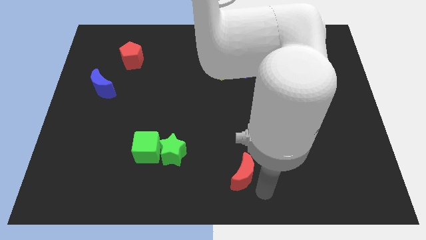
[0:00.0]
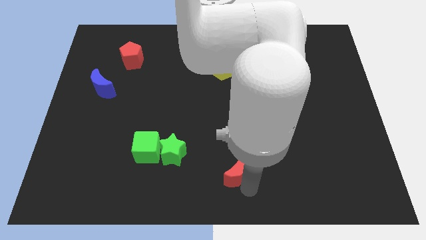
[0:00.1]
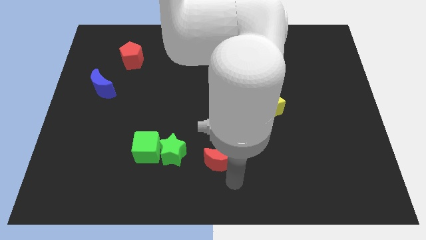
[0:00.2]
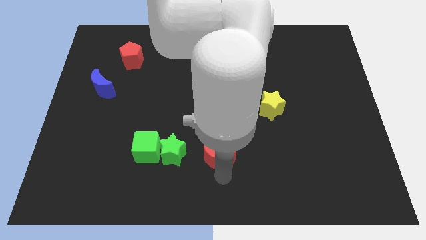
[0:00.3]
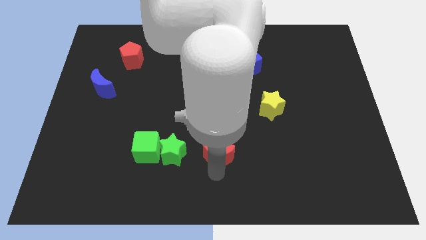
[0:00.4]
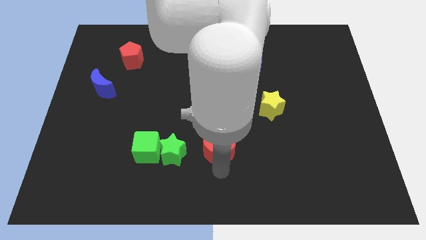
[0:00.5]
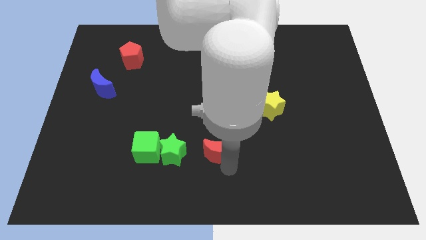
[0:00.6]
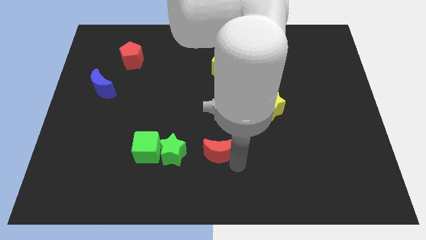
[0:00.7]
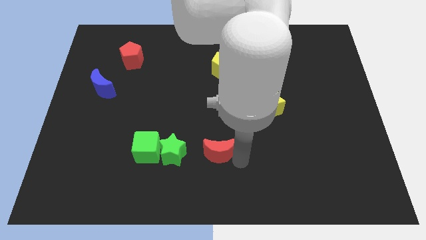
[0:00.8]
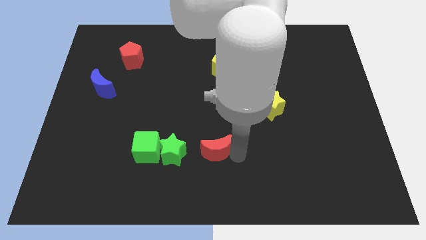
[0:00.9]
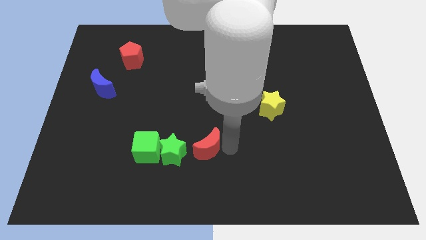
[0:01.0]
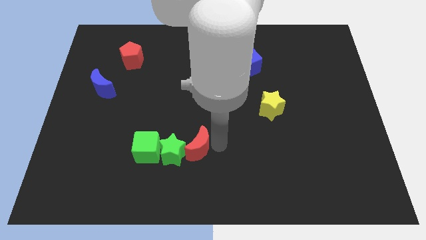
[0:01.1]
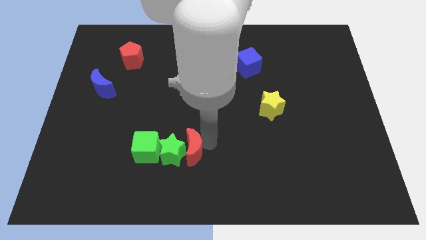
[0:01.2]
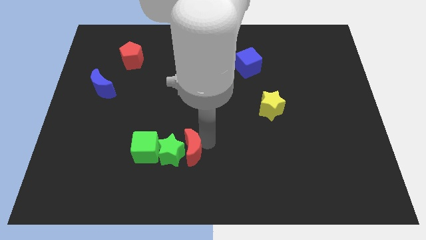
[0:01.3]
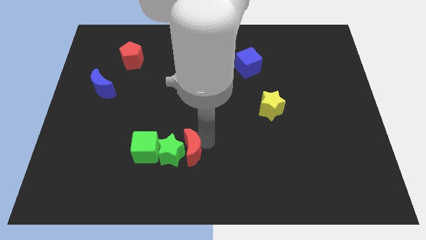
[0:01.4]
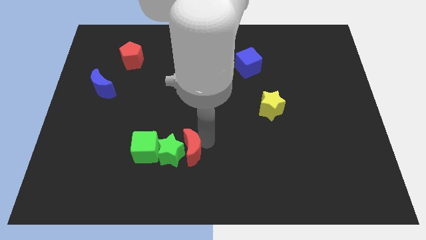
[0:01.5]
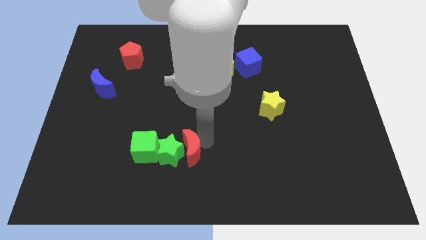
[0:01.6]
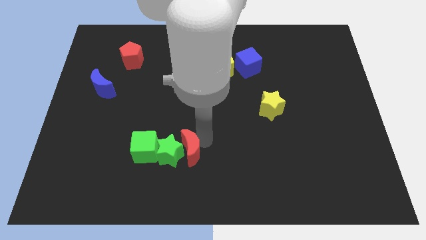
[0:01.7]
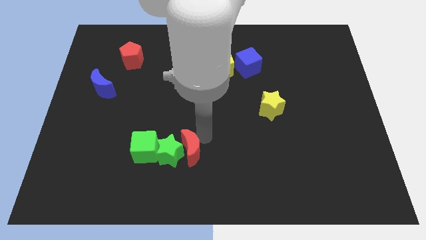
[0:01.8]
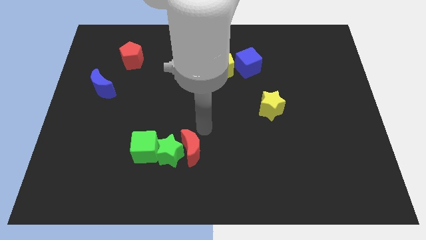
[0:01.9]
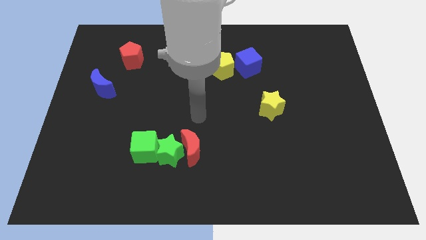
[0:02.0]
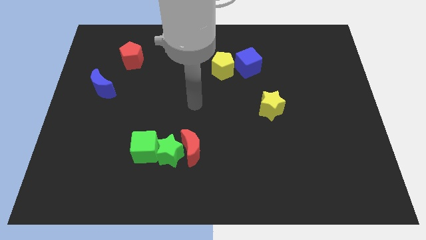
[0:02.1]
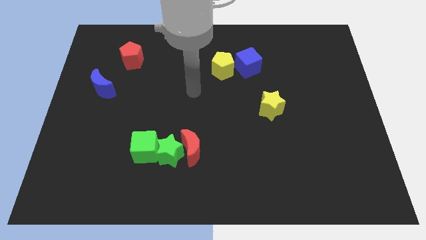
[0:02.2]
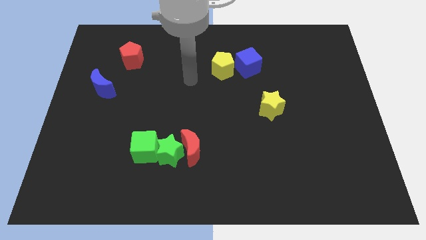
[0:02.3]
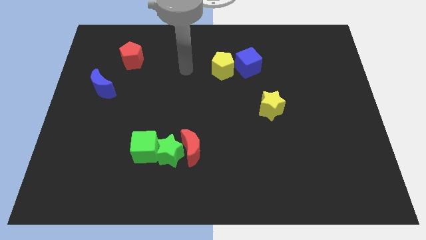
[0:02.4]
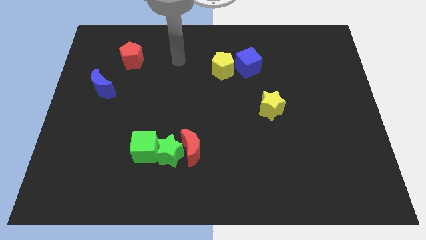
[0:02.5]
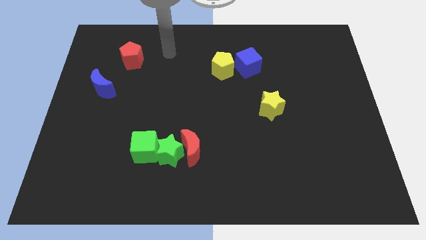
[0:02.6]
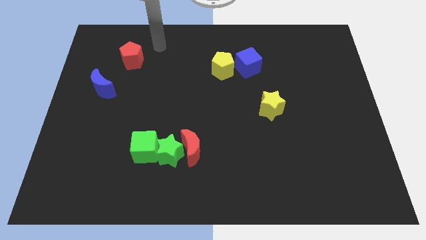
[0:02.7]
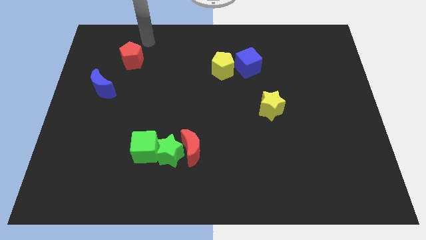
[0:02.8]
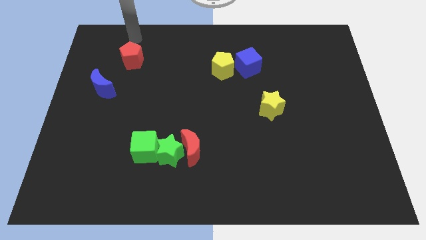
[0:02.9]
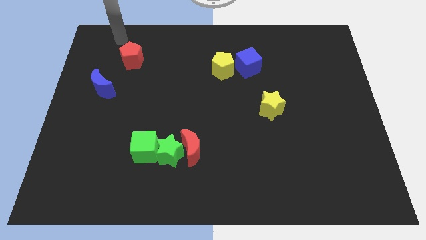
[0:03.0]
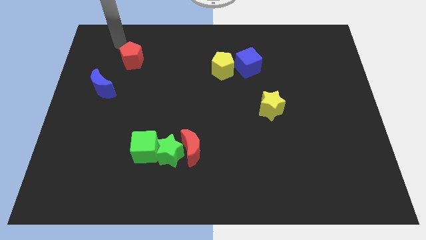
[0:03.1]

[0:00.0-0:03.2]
slide the red crescent into the green star

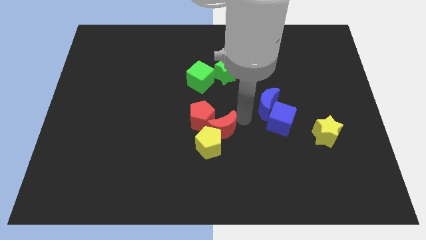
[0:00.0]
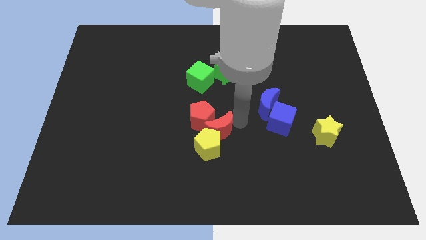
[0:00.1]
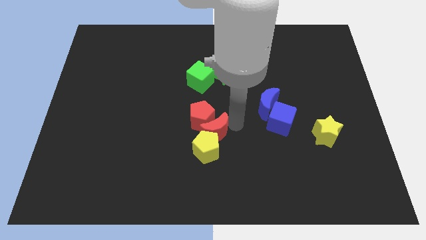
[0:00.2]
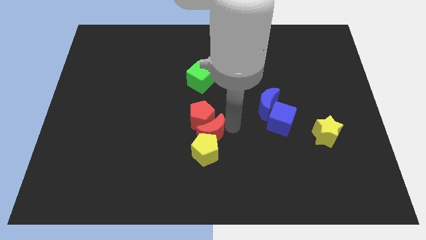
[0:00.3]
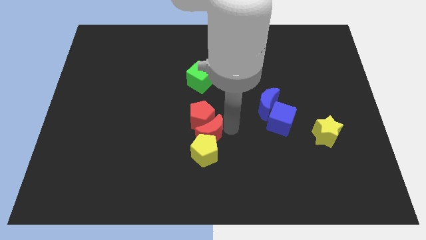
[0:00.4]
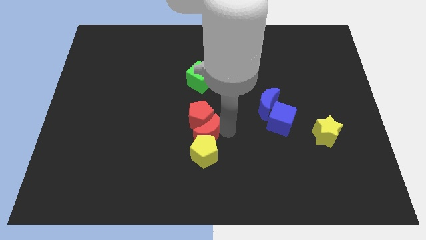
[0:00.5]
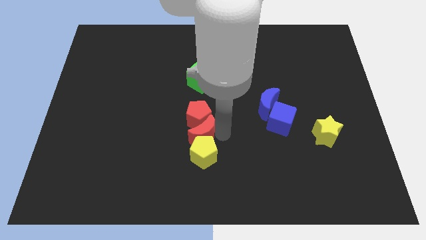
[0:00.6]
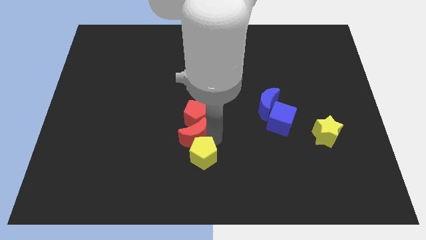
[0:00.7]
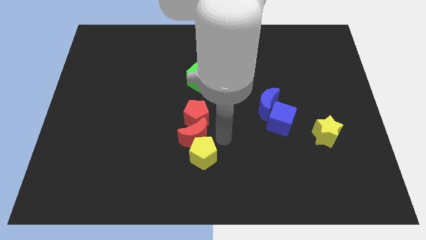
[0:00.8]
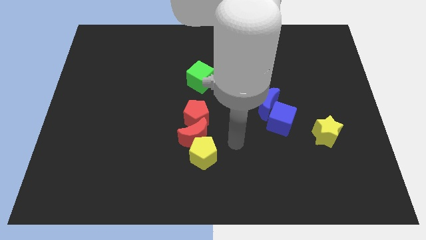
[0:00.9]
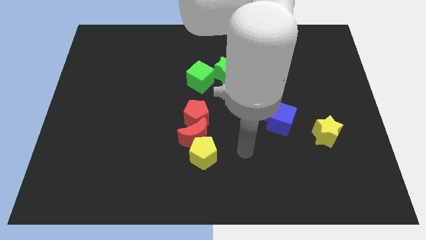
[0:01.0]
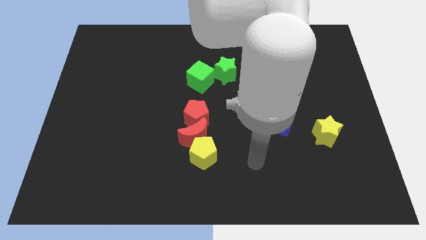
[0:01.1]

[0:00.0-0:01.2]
place the red crescent in between the pentagons

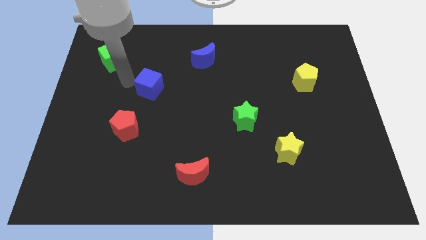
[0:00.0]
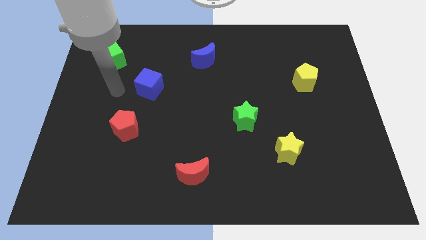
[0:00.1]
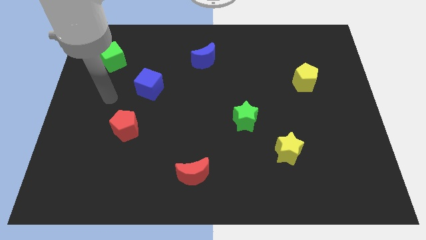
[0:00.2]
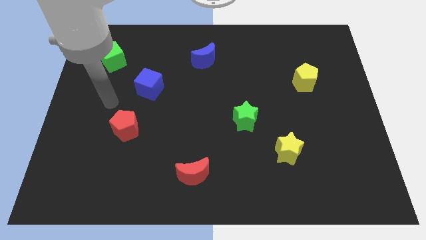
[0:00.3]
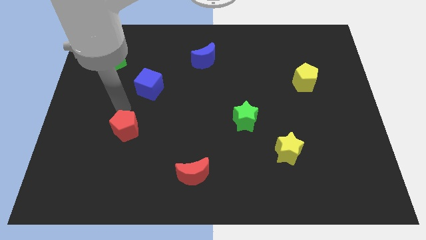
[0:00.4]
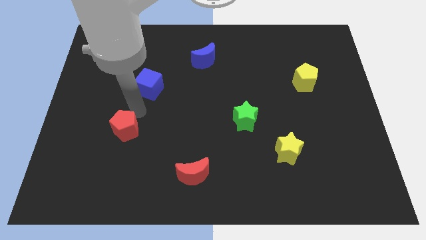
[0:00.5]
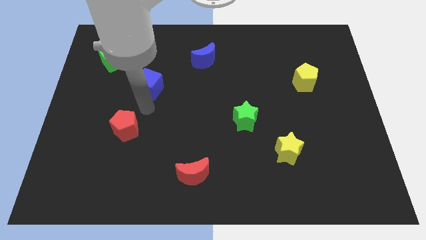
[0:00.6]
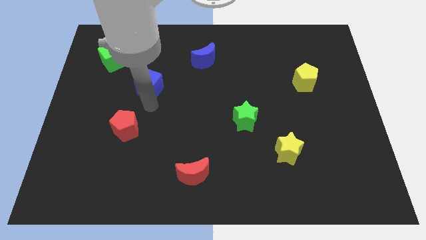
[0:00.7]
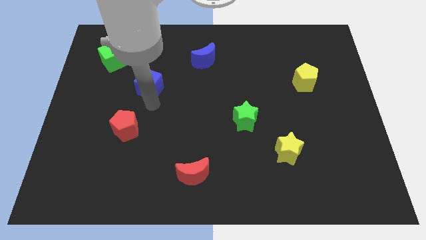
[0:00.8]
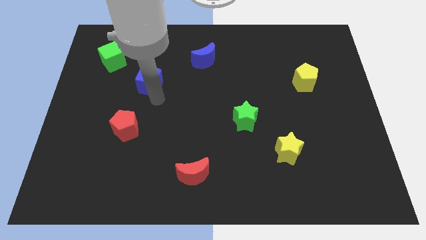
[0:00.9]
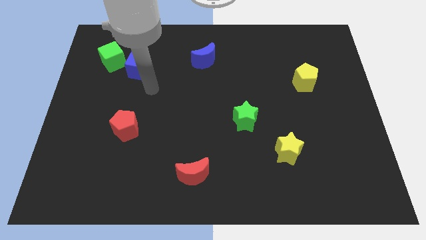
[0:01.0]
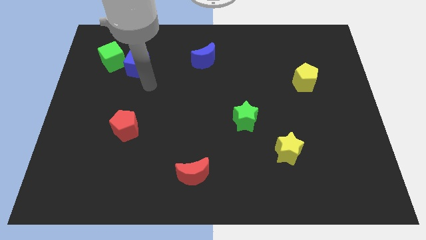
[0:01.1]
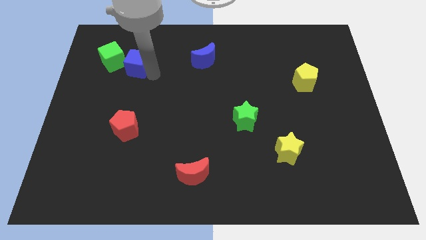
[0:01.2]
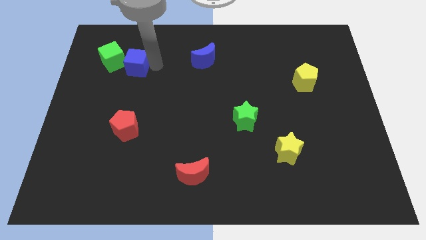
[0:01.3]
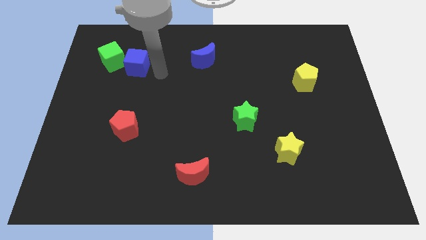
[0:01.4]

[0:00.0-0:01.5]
put the blue cube into the green cube to the right

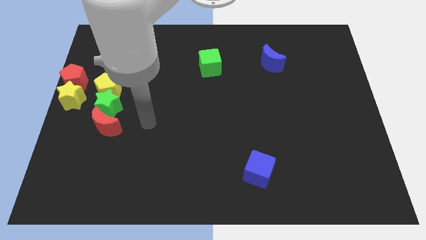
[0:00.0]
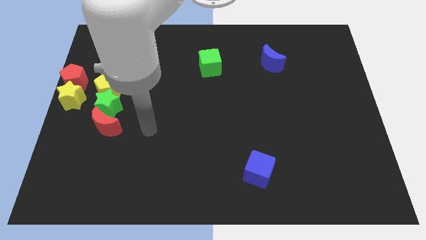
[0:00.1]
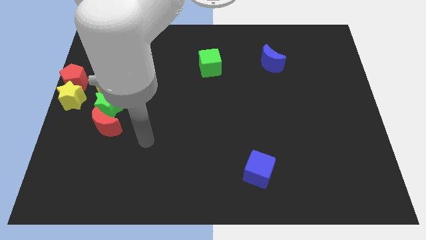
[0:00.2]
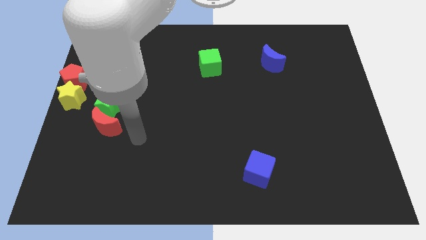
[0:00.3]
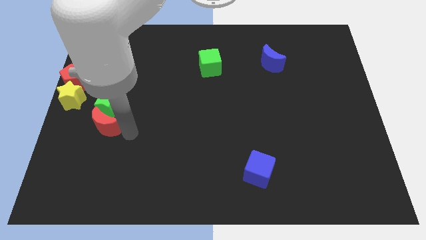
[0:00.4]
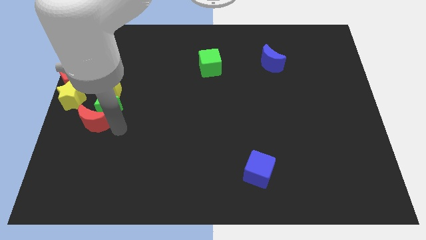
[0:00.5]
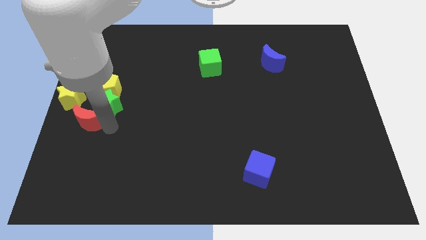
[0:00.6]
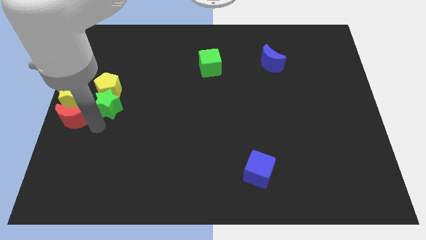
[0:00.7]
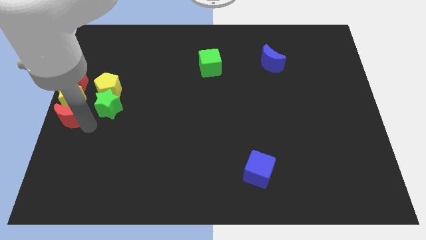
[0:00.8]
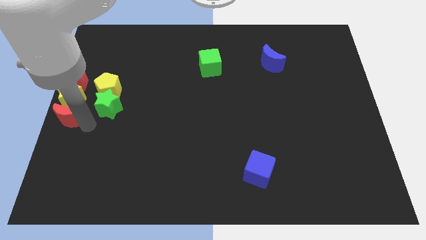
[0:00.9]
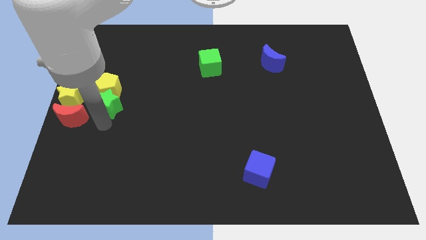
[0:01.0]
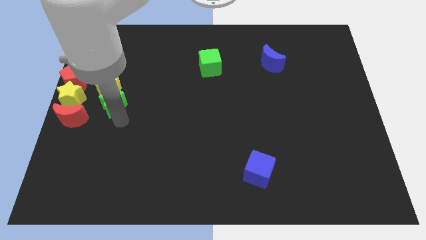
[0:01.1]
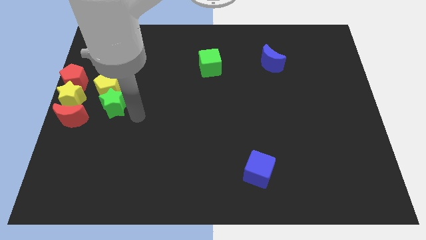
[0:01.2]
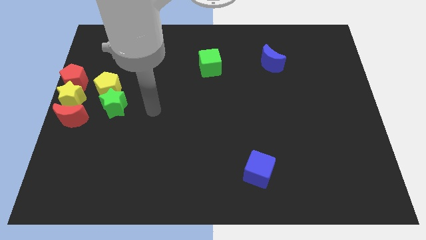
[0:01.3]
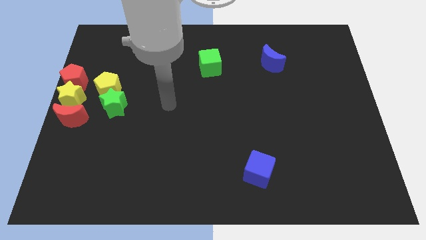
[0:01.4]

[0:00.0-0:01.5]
move the red moon below the yellow star

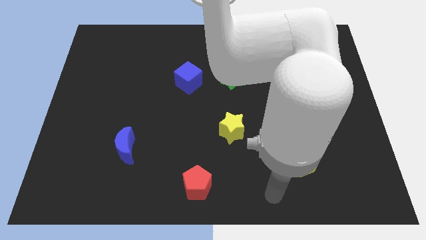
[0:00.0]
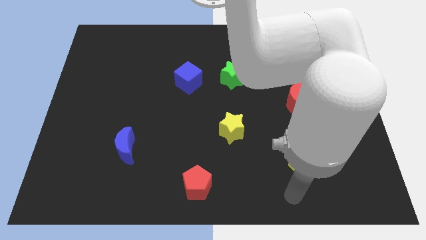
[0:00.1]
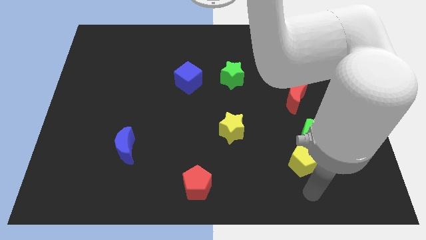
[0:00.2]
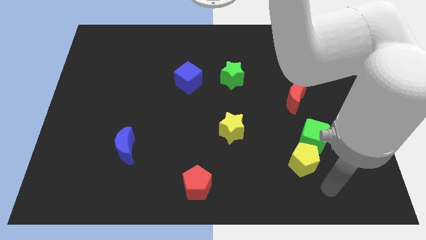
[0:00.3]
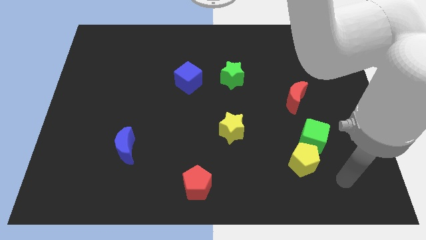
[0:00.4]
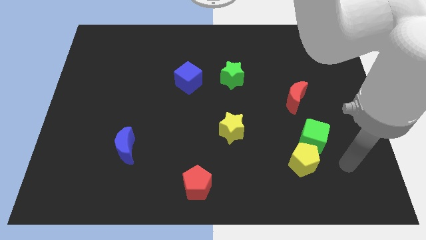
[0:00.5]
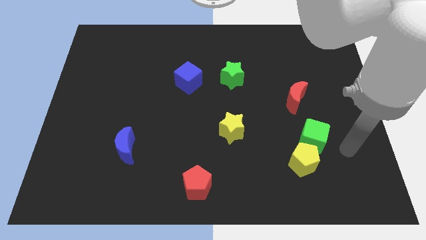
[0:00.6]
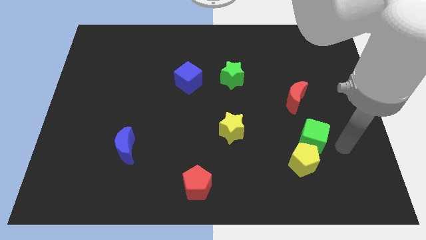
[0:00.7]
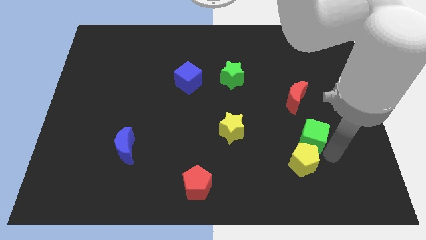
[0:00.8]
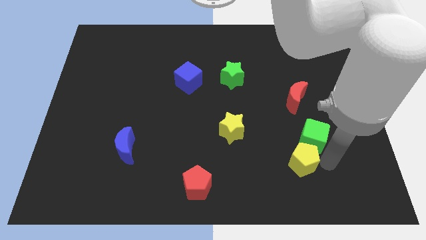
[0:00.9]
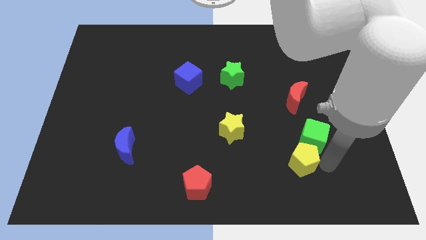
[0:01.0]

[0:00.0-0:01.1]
place the arm right to the yellow pentagon

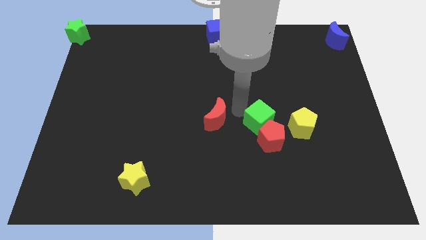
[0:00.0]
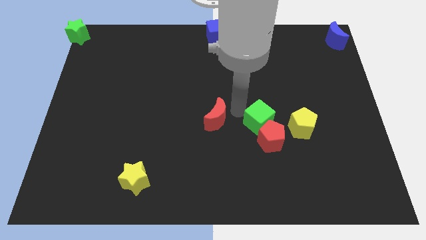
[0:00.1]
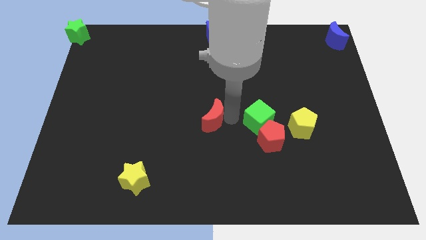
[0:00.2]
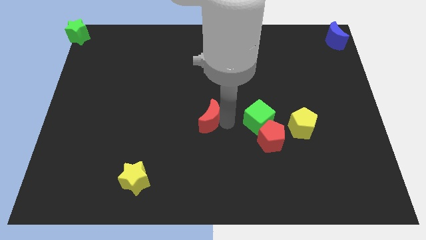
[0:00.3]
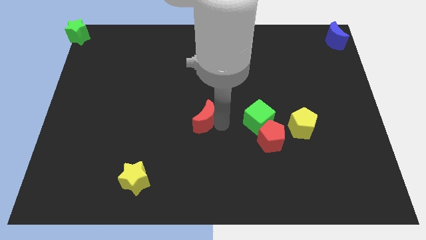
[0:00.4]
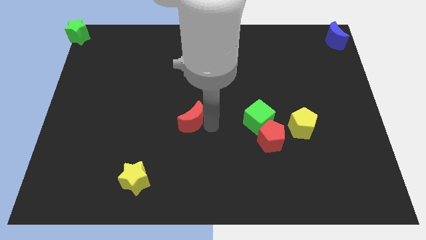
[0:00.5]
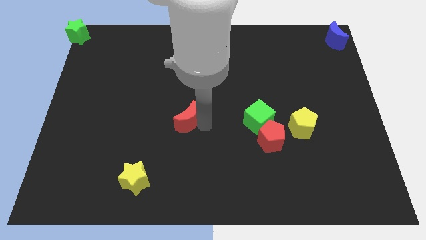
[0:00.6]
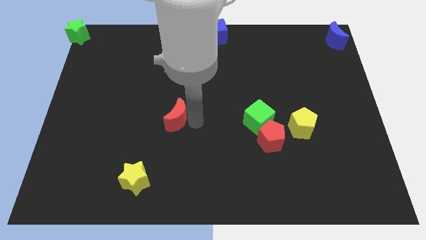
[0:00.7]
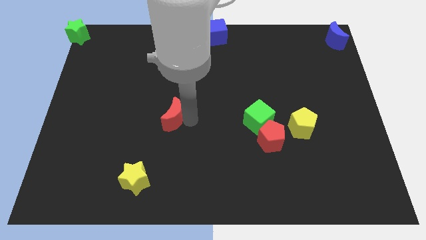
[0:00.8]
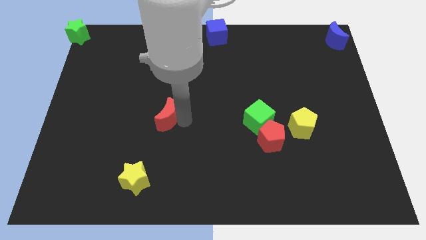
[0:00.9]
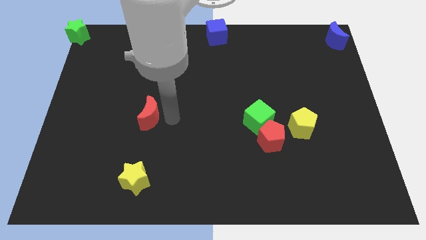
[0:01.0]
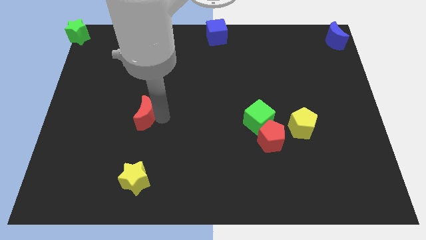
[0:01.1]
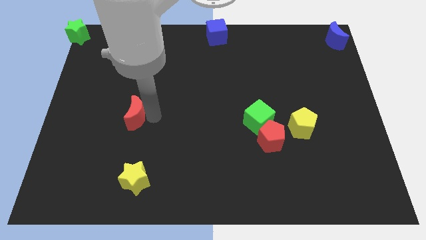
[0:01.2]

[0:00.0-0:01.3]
push the red crescent to the top of the yellow star
